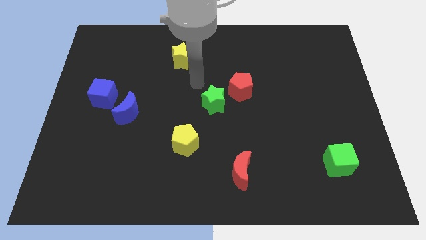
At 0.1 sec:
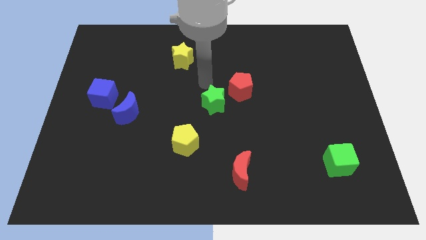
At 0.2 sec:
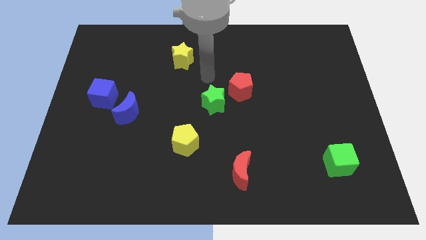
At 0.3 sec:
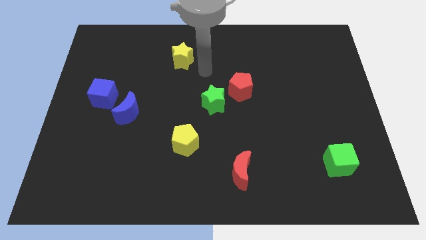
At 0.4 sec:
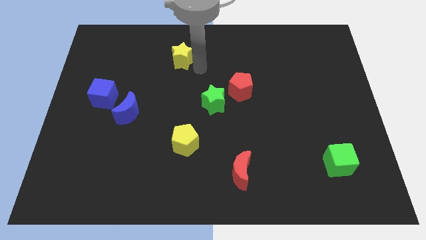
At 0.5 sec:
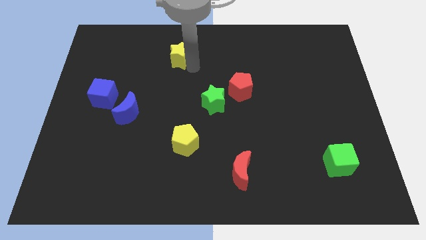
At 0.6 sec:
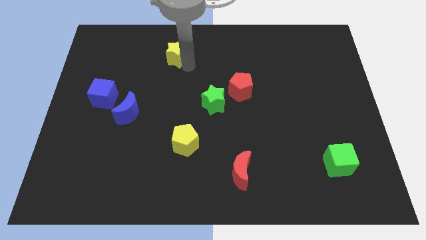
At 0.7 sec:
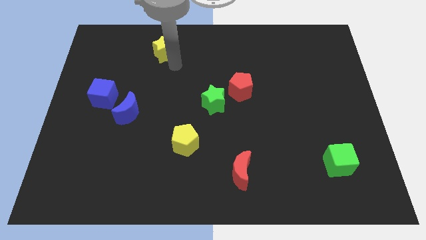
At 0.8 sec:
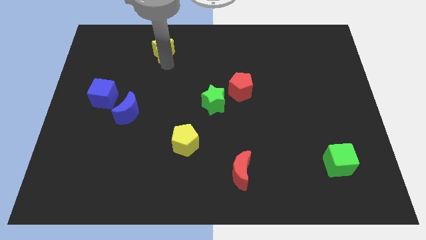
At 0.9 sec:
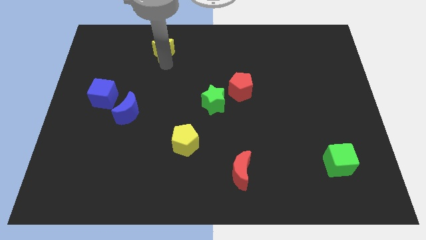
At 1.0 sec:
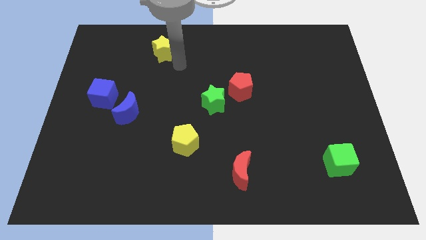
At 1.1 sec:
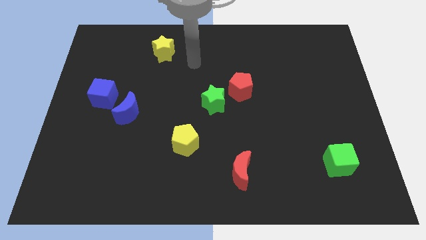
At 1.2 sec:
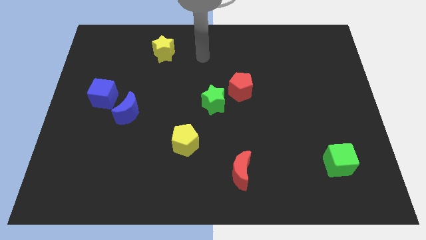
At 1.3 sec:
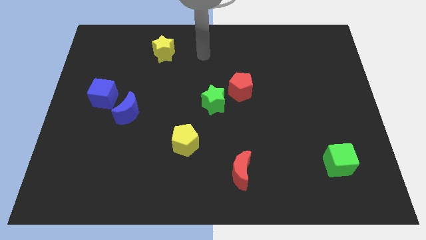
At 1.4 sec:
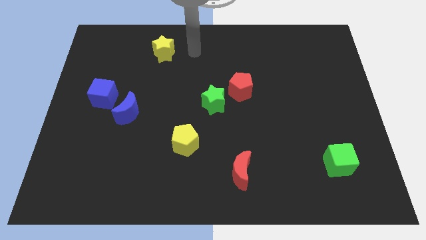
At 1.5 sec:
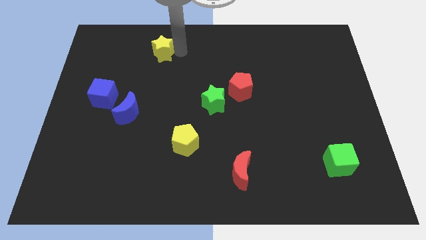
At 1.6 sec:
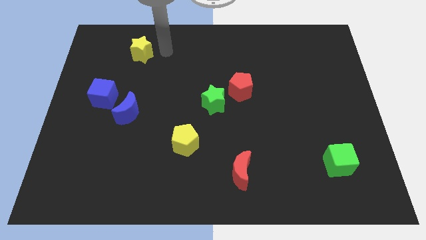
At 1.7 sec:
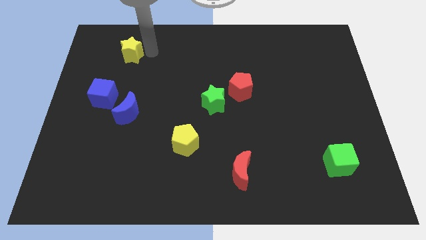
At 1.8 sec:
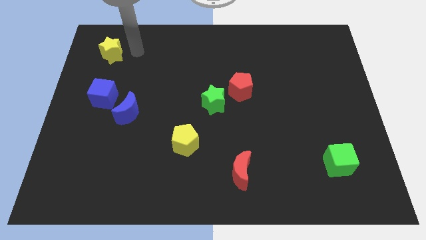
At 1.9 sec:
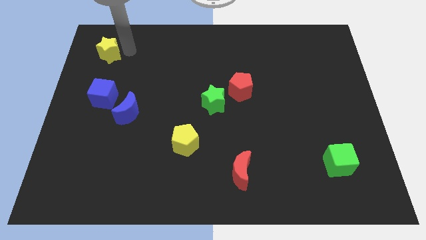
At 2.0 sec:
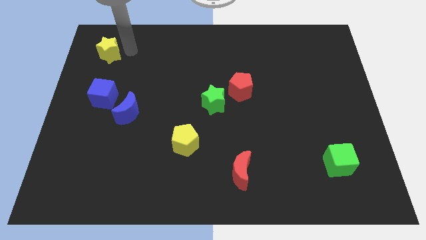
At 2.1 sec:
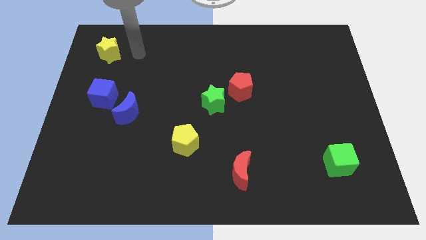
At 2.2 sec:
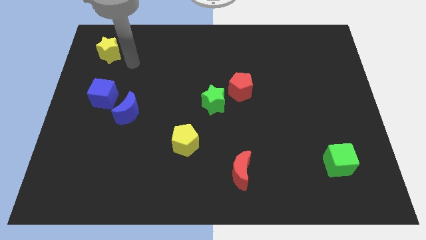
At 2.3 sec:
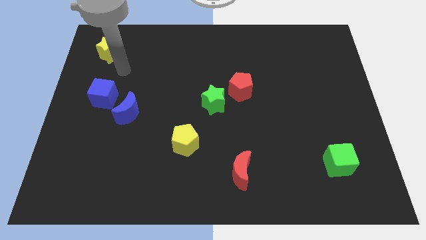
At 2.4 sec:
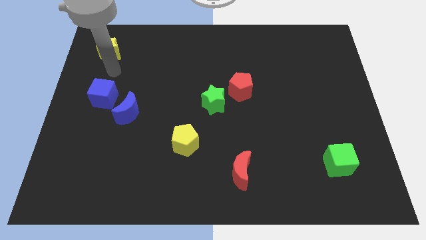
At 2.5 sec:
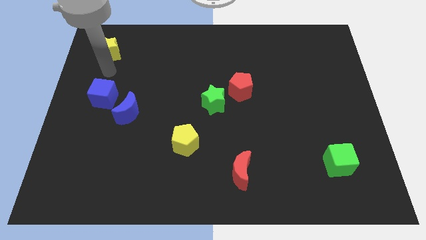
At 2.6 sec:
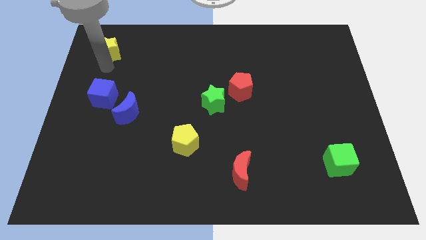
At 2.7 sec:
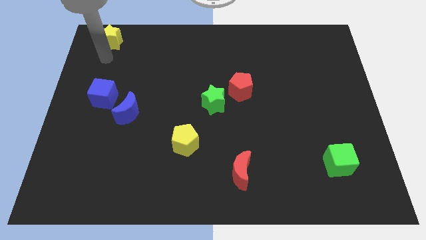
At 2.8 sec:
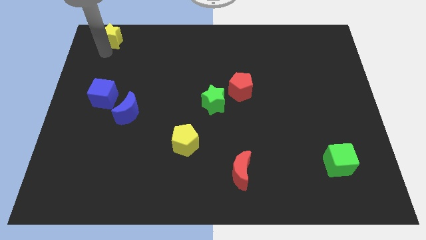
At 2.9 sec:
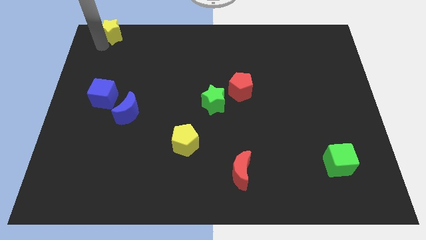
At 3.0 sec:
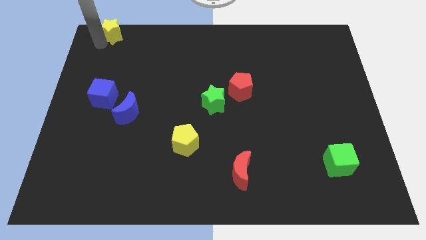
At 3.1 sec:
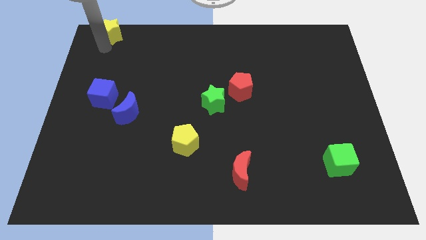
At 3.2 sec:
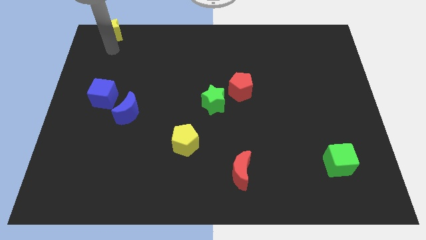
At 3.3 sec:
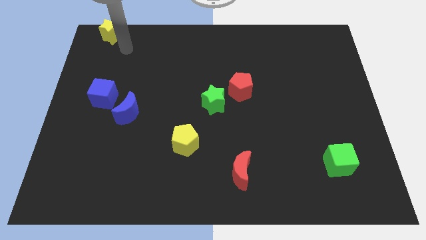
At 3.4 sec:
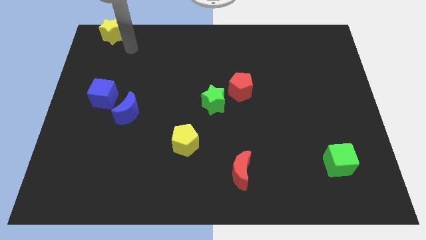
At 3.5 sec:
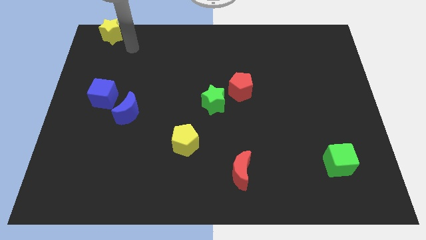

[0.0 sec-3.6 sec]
push the yellow star to the left top

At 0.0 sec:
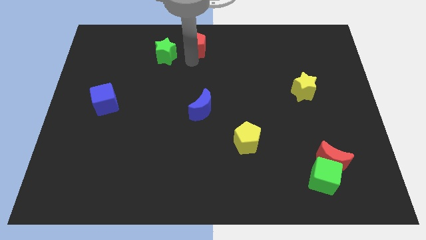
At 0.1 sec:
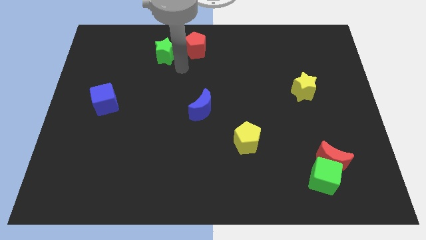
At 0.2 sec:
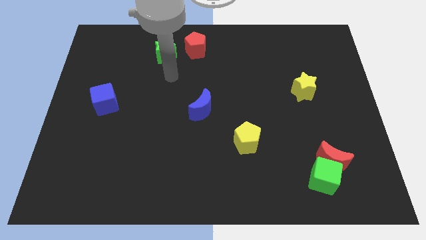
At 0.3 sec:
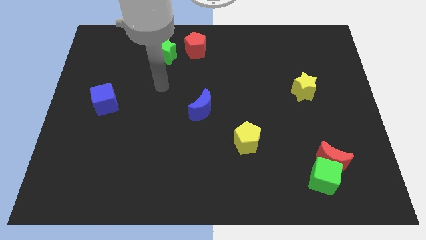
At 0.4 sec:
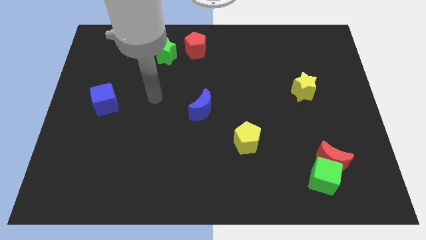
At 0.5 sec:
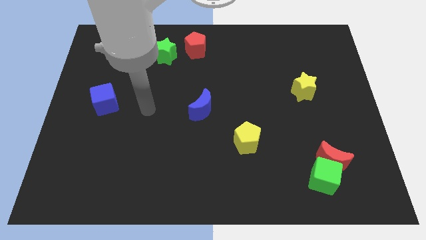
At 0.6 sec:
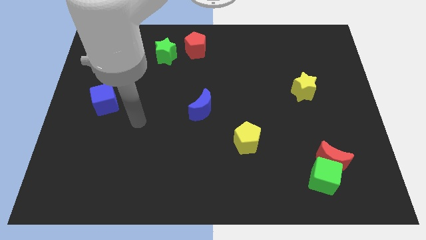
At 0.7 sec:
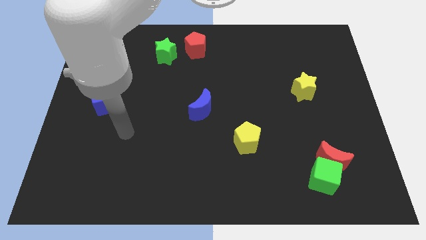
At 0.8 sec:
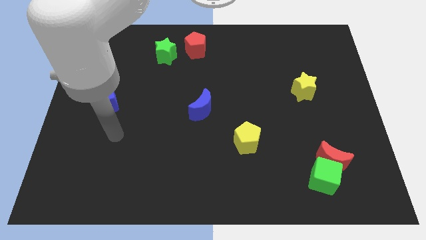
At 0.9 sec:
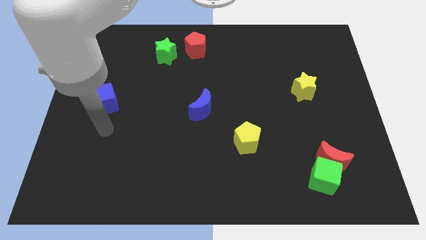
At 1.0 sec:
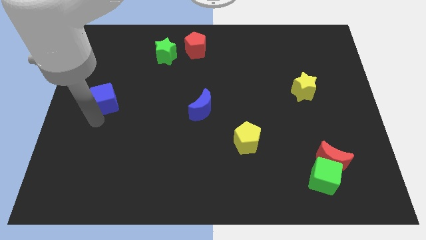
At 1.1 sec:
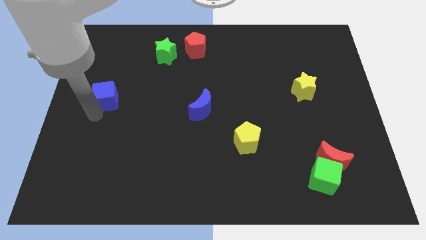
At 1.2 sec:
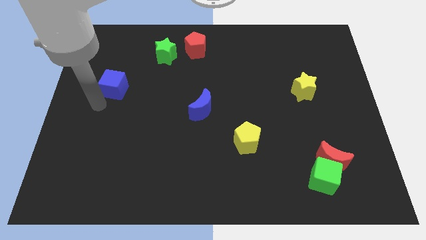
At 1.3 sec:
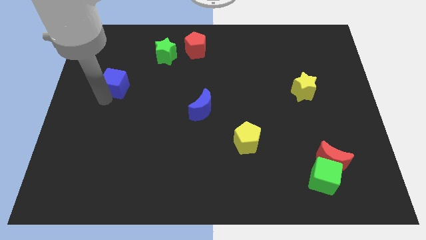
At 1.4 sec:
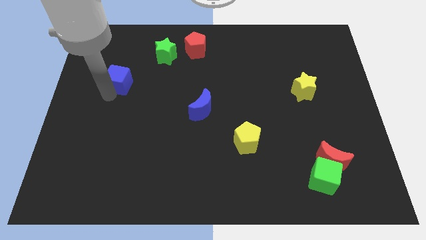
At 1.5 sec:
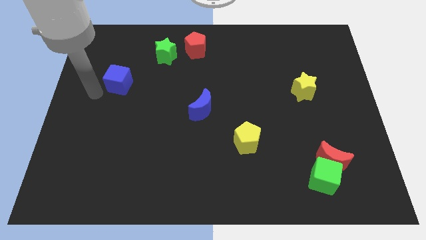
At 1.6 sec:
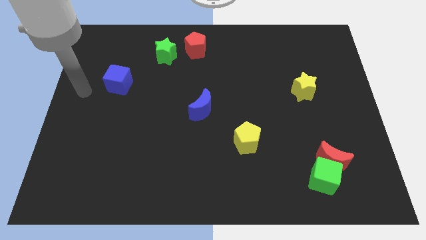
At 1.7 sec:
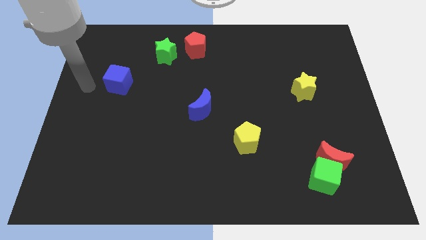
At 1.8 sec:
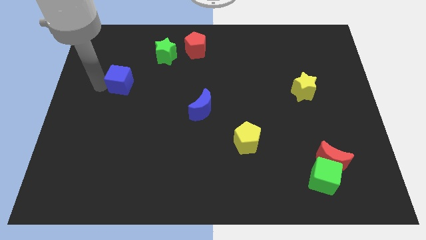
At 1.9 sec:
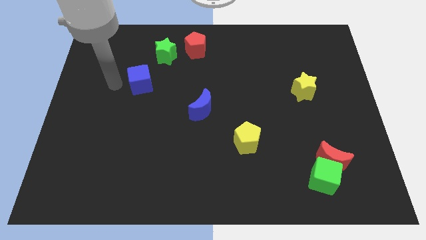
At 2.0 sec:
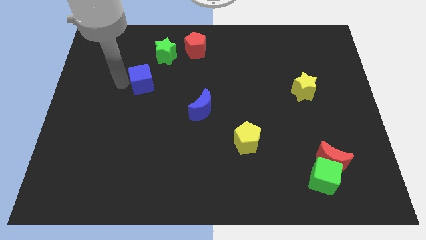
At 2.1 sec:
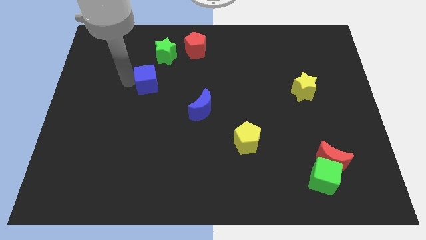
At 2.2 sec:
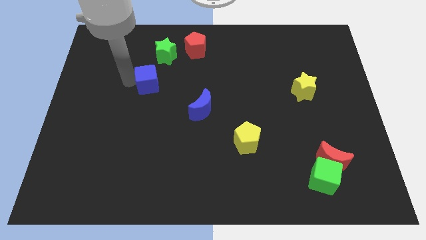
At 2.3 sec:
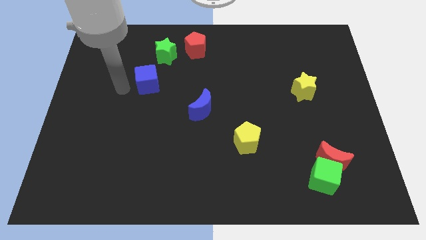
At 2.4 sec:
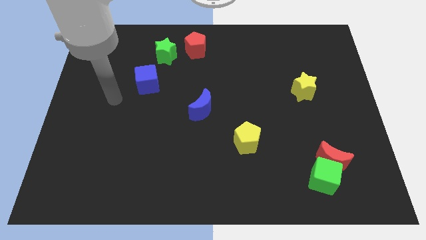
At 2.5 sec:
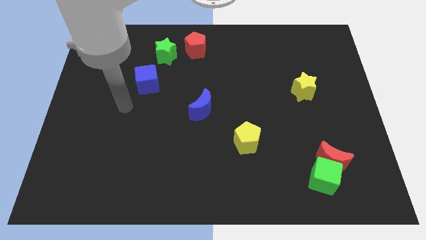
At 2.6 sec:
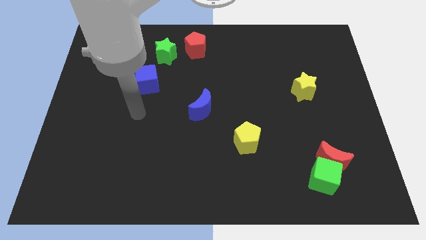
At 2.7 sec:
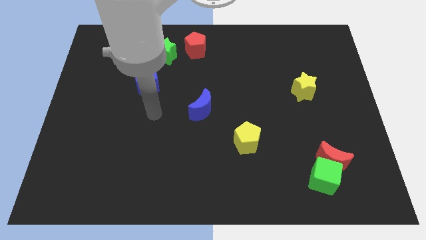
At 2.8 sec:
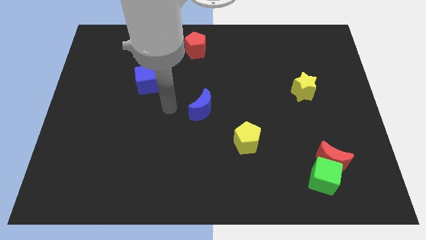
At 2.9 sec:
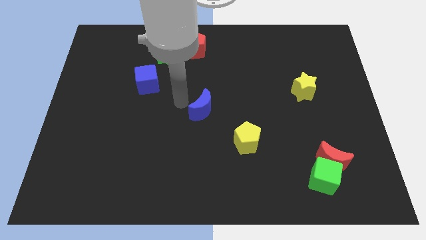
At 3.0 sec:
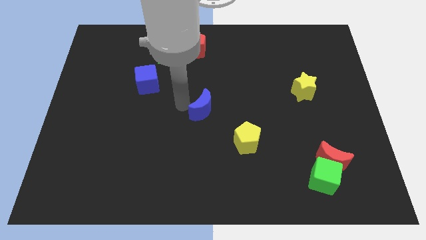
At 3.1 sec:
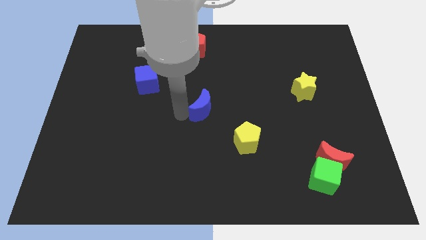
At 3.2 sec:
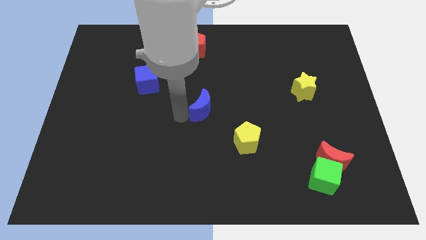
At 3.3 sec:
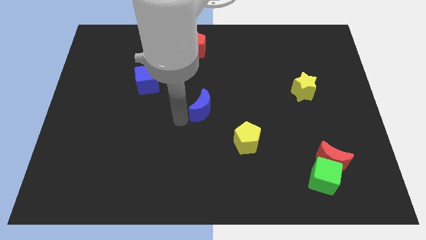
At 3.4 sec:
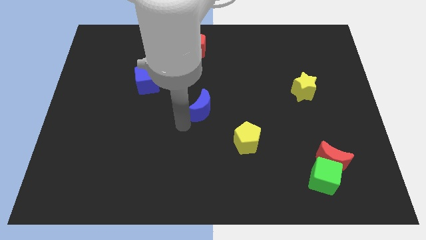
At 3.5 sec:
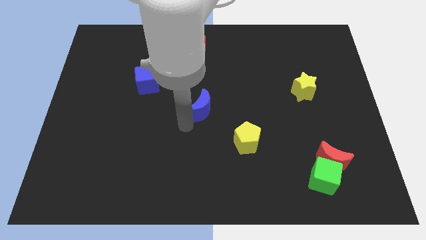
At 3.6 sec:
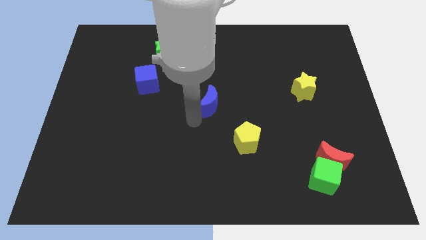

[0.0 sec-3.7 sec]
place blue cube and blue crescent in a diagonal line

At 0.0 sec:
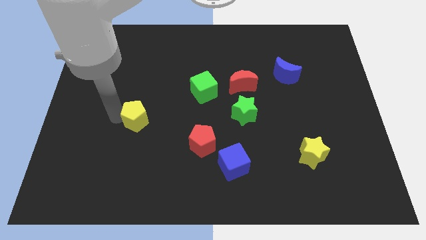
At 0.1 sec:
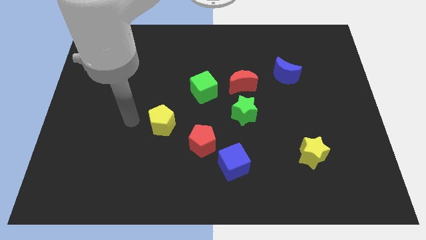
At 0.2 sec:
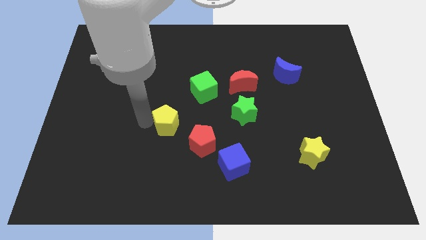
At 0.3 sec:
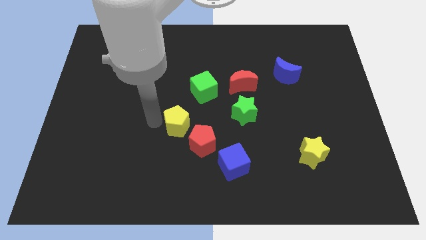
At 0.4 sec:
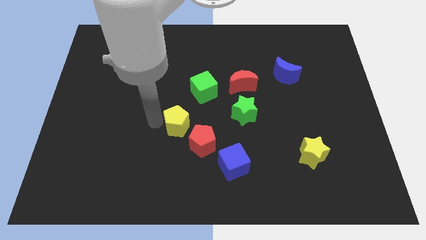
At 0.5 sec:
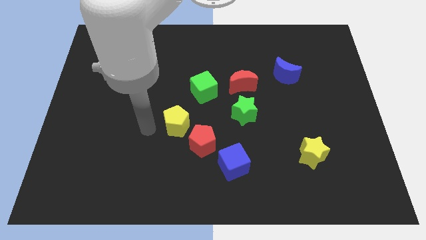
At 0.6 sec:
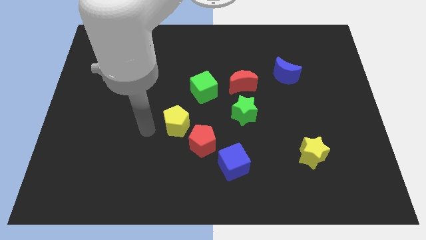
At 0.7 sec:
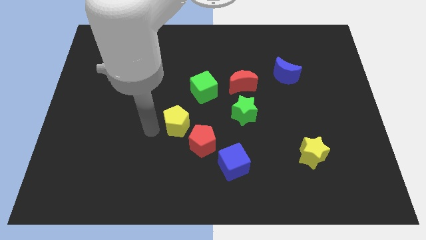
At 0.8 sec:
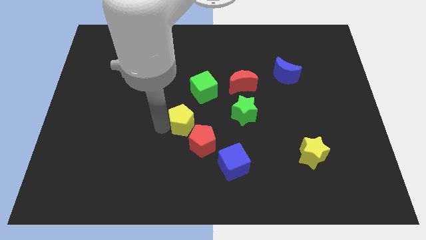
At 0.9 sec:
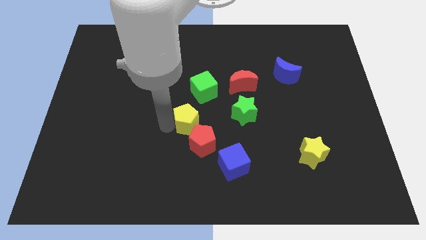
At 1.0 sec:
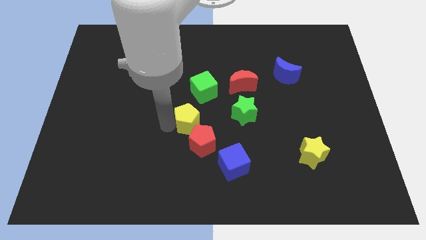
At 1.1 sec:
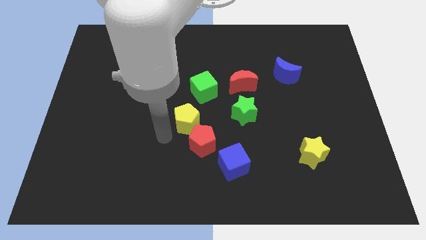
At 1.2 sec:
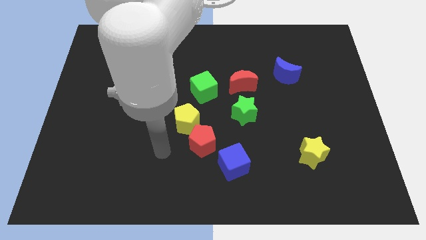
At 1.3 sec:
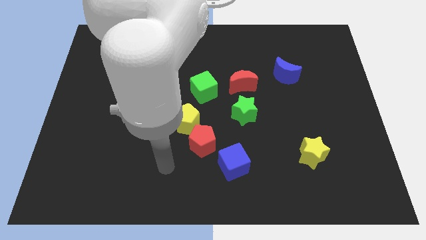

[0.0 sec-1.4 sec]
move the yellow pentagon towards the center of the board

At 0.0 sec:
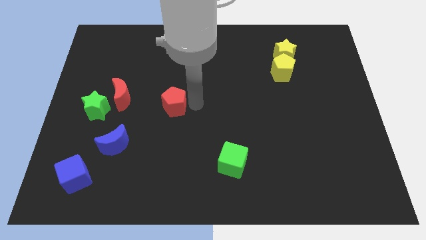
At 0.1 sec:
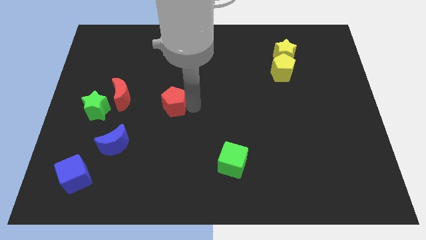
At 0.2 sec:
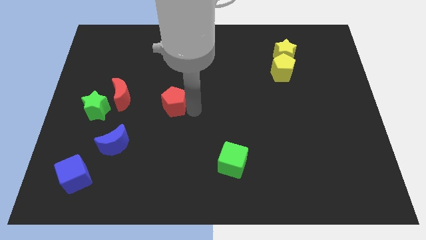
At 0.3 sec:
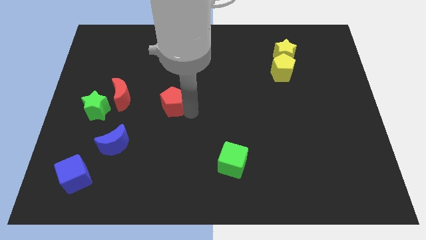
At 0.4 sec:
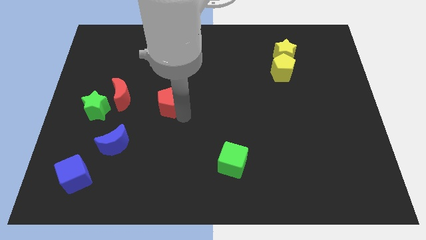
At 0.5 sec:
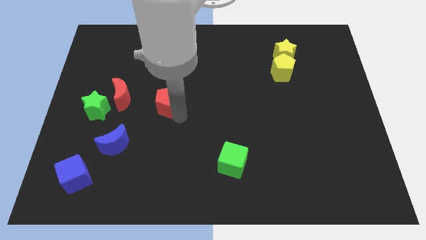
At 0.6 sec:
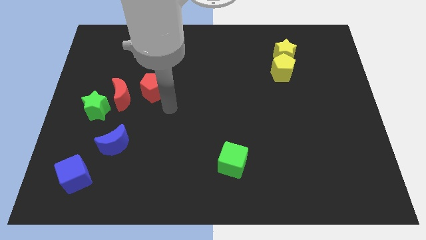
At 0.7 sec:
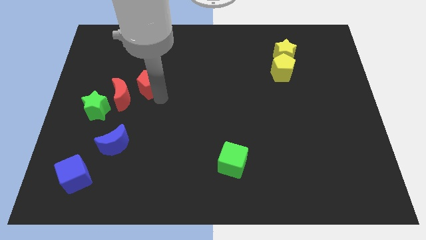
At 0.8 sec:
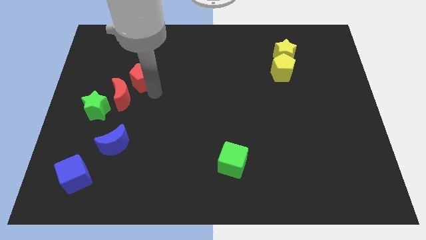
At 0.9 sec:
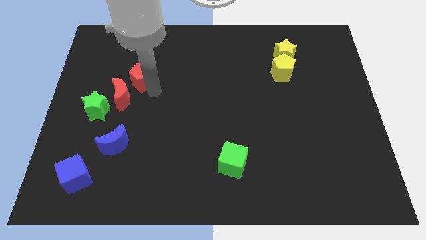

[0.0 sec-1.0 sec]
move the red pentagon towards the right side of red crescent
